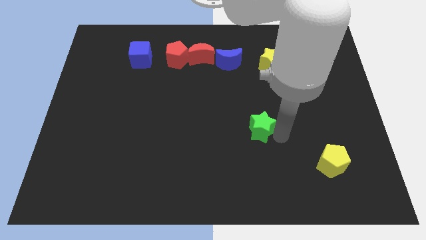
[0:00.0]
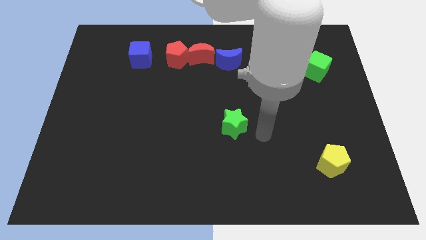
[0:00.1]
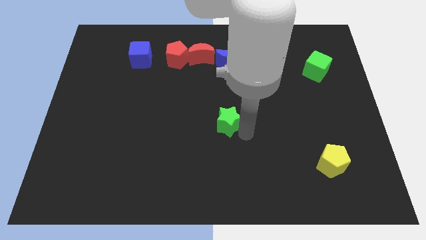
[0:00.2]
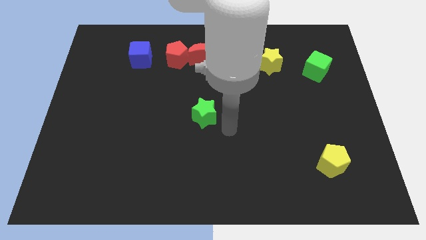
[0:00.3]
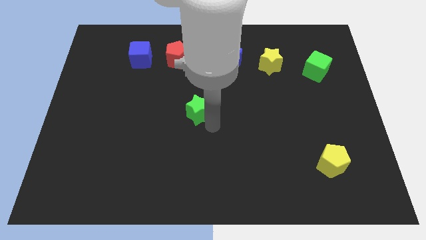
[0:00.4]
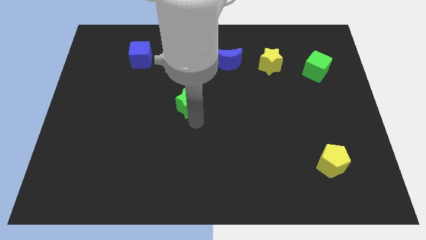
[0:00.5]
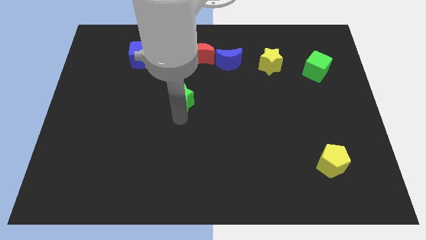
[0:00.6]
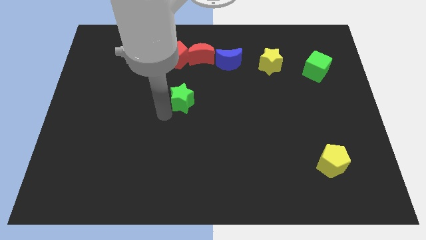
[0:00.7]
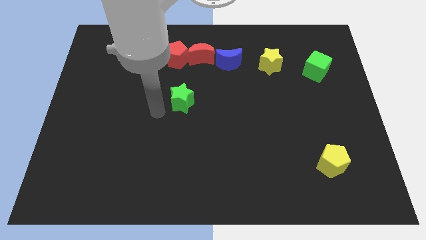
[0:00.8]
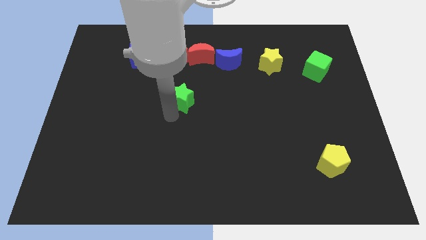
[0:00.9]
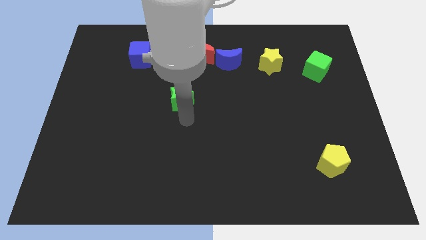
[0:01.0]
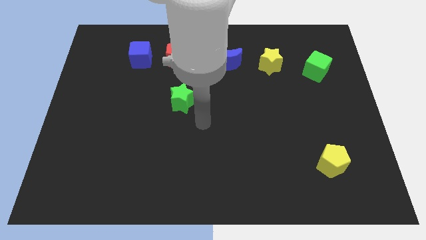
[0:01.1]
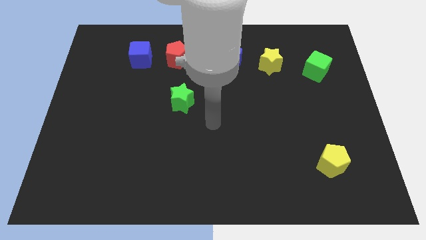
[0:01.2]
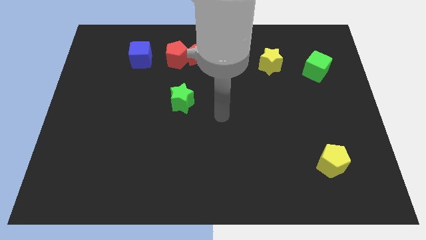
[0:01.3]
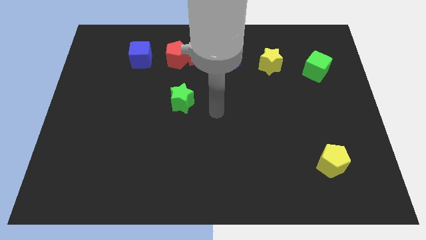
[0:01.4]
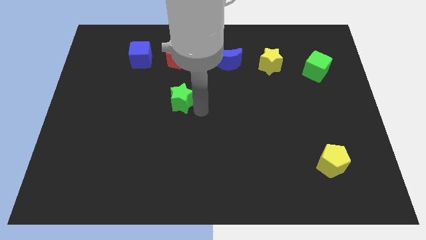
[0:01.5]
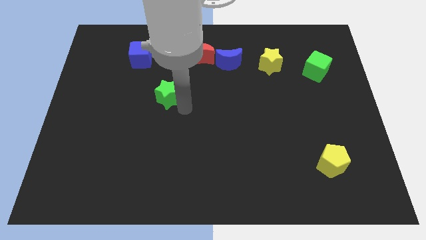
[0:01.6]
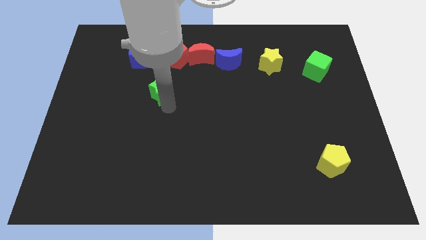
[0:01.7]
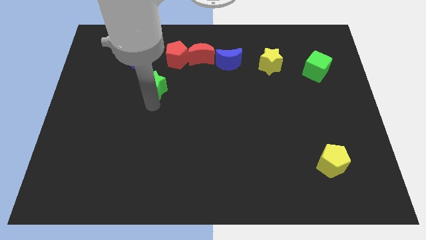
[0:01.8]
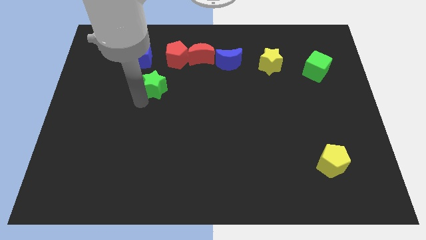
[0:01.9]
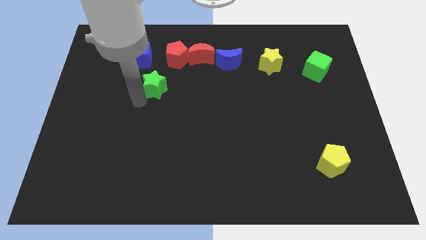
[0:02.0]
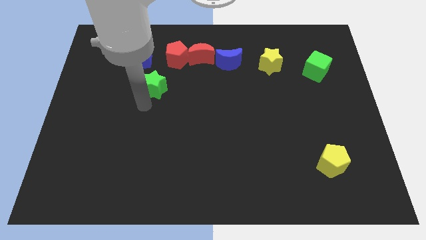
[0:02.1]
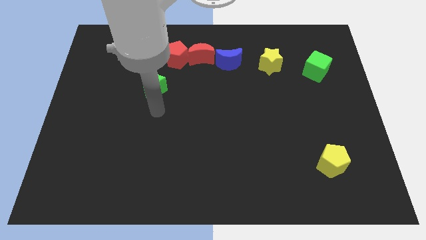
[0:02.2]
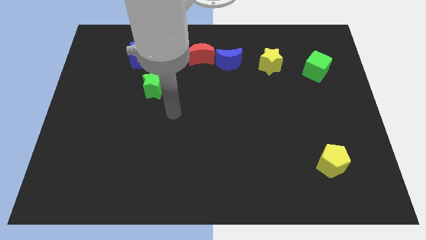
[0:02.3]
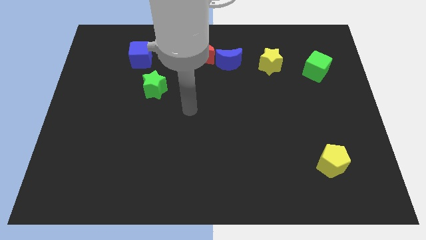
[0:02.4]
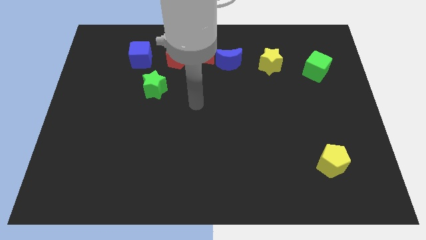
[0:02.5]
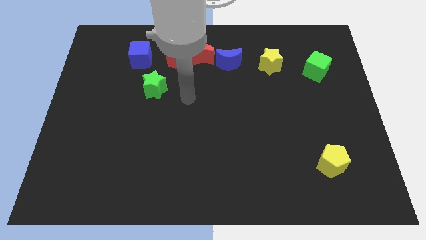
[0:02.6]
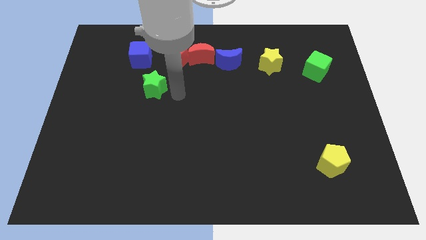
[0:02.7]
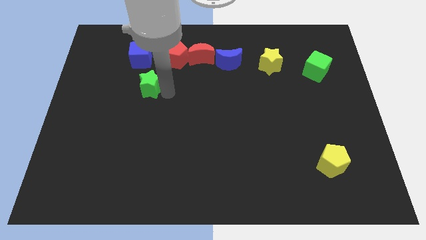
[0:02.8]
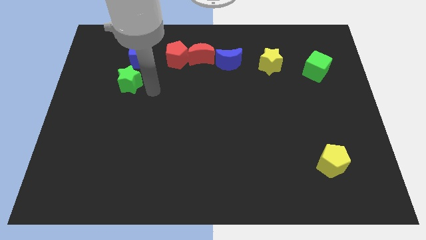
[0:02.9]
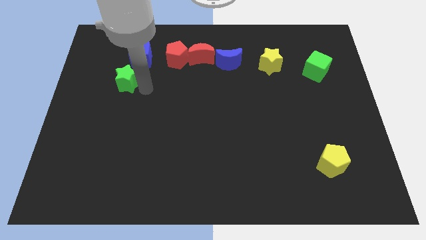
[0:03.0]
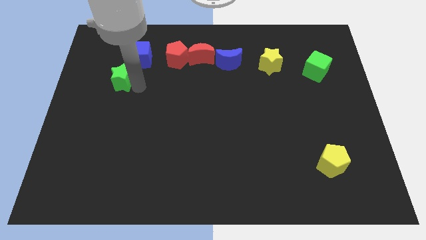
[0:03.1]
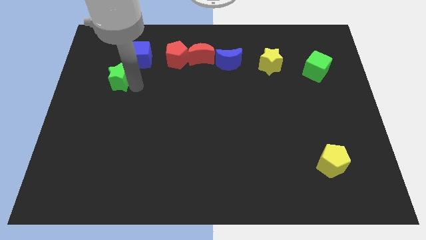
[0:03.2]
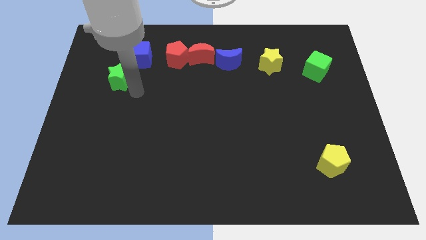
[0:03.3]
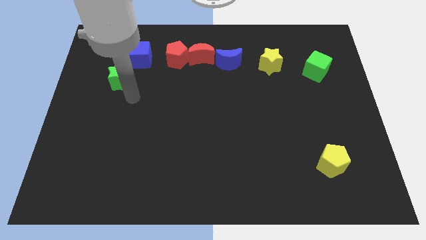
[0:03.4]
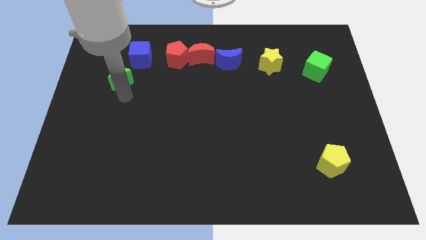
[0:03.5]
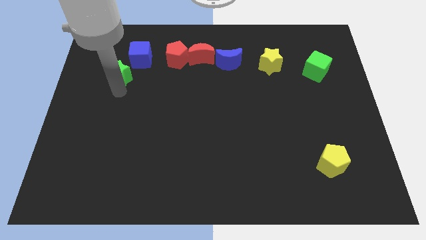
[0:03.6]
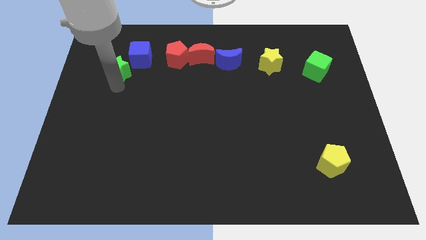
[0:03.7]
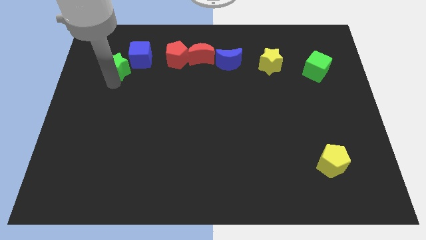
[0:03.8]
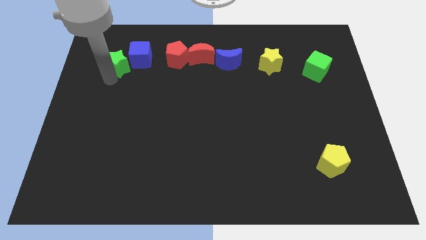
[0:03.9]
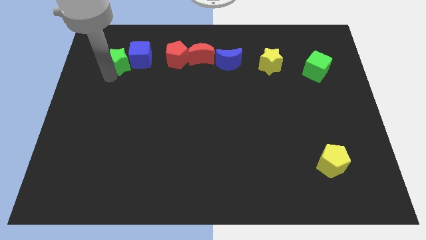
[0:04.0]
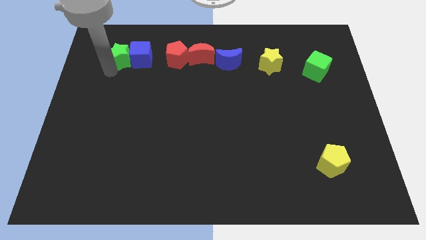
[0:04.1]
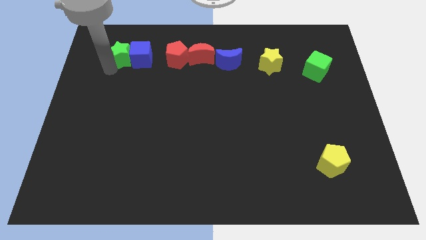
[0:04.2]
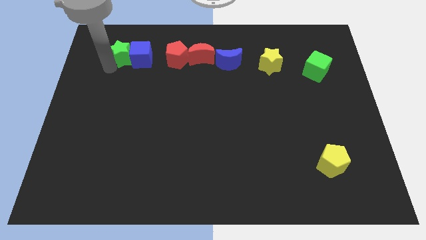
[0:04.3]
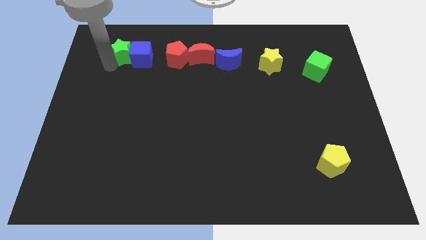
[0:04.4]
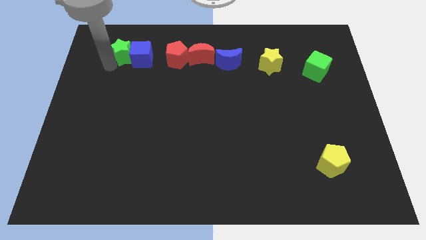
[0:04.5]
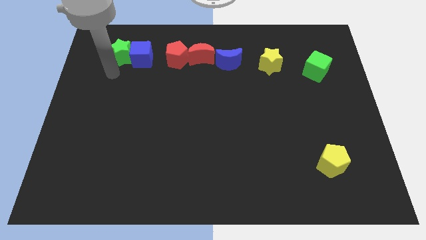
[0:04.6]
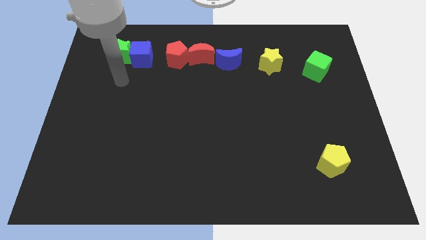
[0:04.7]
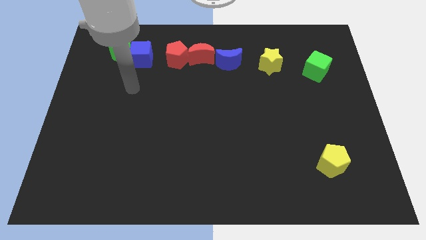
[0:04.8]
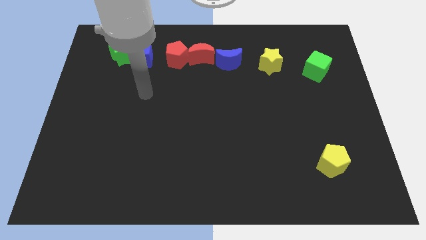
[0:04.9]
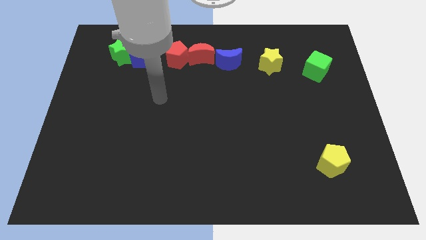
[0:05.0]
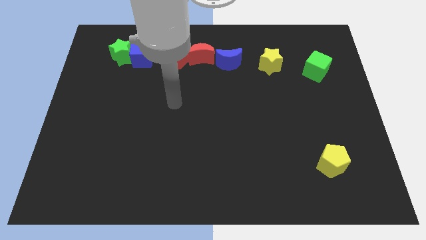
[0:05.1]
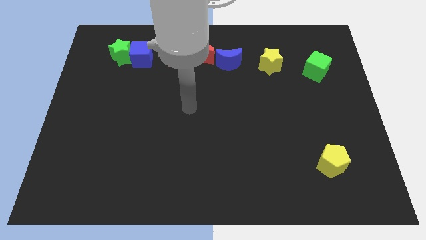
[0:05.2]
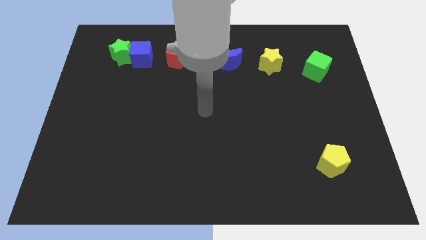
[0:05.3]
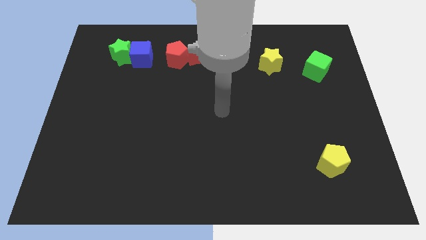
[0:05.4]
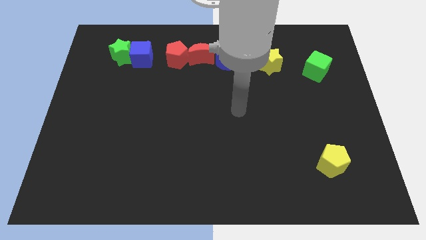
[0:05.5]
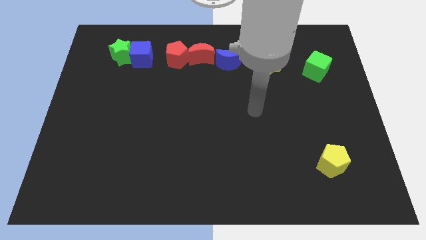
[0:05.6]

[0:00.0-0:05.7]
place the green star into the blue cube

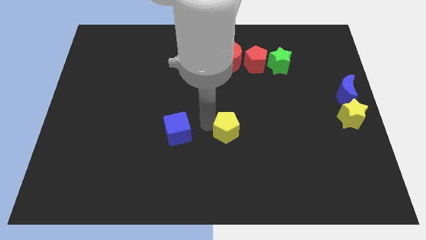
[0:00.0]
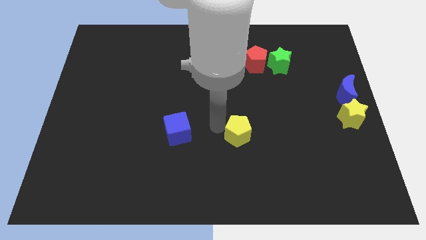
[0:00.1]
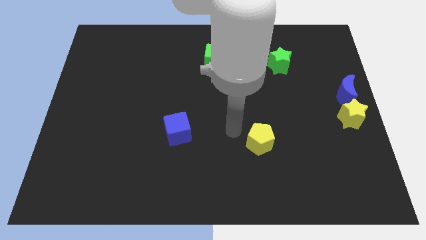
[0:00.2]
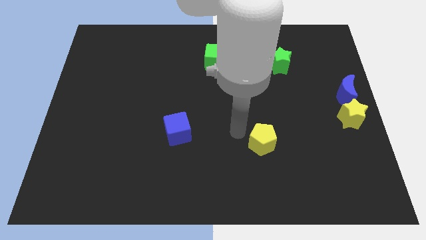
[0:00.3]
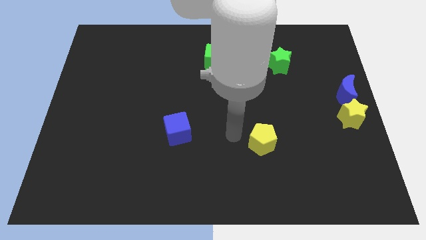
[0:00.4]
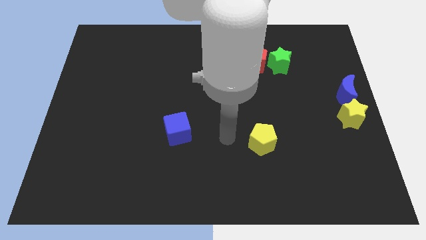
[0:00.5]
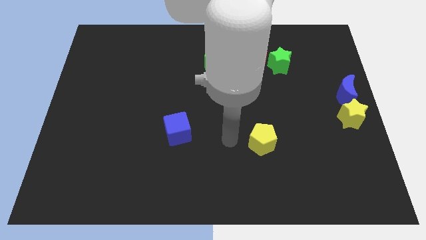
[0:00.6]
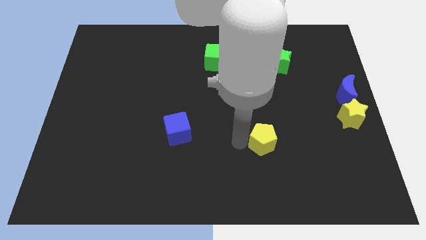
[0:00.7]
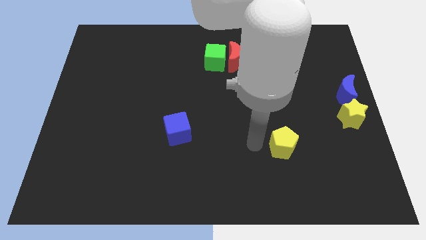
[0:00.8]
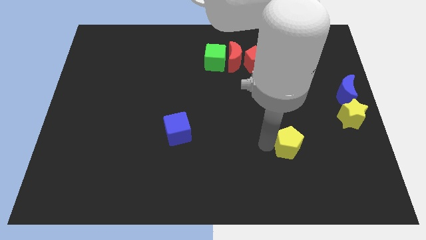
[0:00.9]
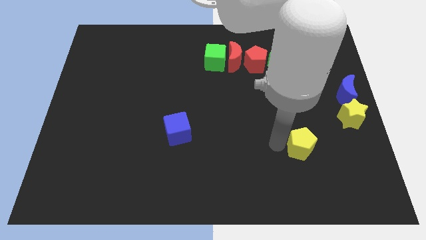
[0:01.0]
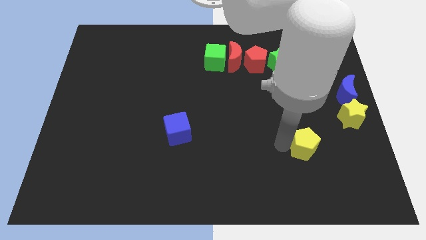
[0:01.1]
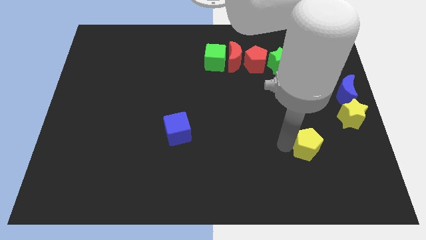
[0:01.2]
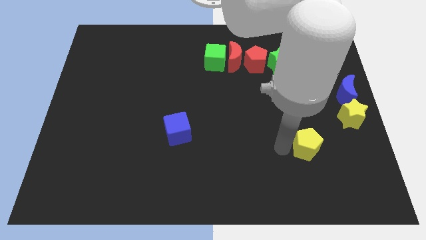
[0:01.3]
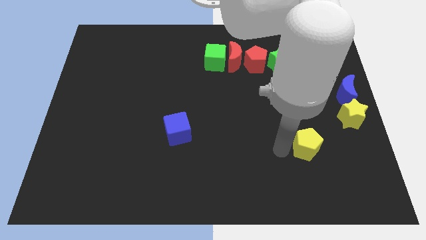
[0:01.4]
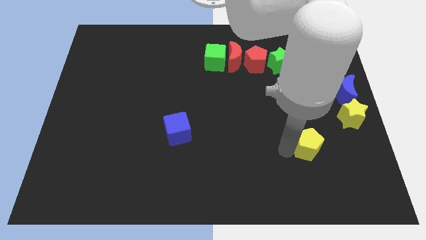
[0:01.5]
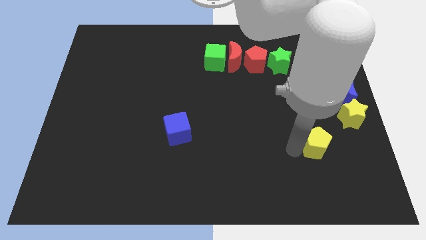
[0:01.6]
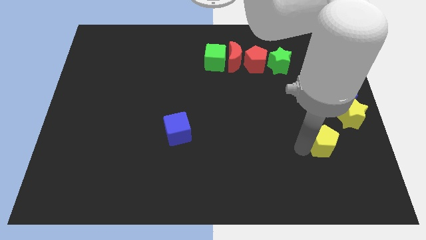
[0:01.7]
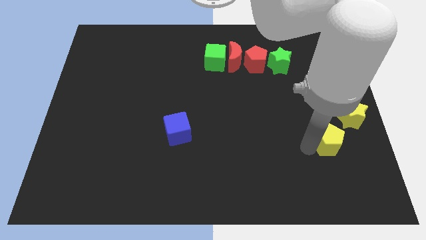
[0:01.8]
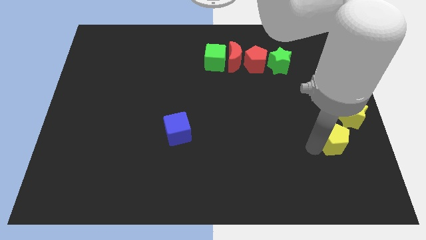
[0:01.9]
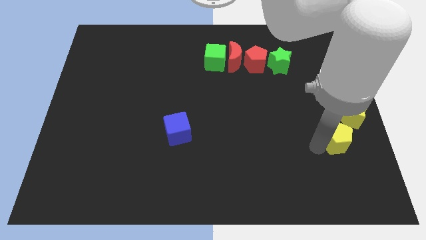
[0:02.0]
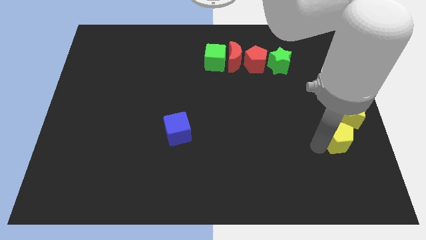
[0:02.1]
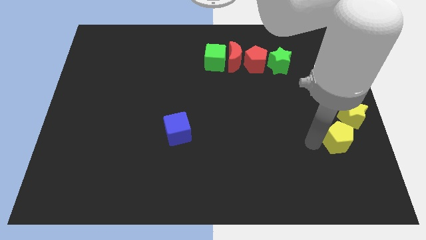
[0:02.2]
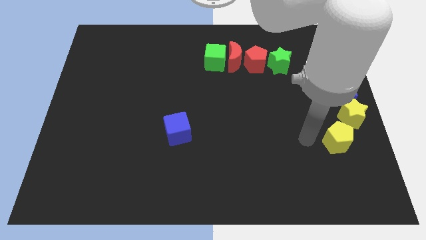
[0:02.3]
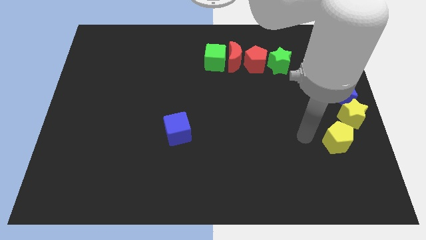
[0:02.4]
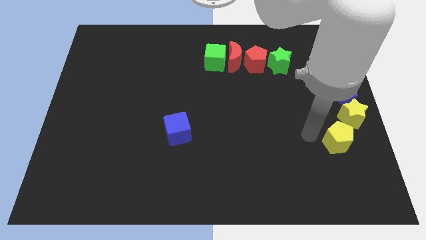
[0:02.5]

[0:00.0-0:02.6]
place the yellow pentagon down to the yellow star

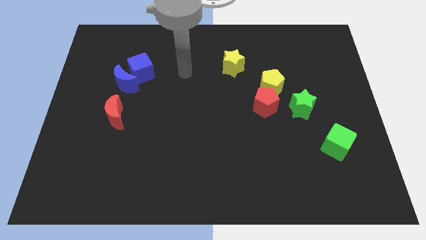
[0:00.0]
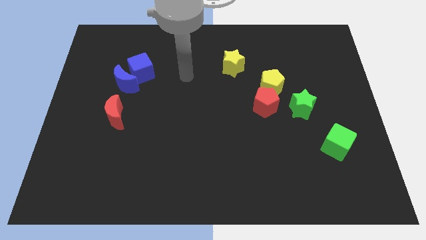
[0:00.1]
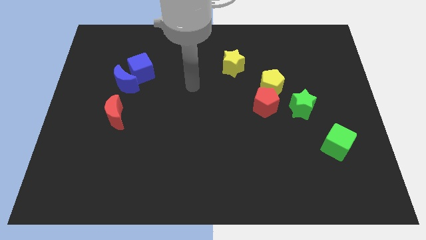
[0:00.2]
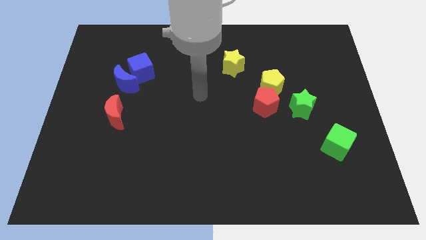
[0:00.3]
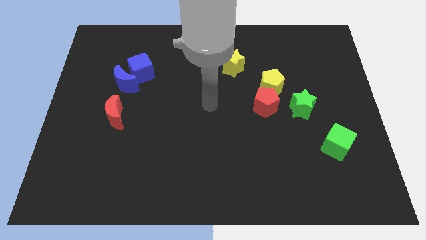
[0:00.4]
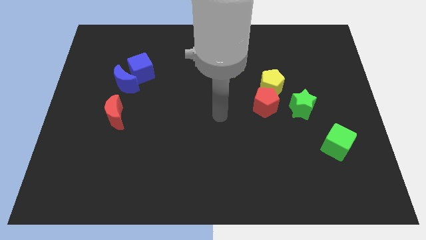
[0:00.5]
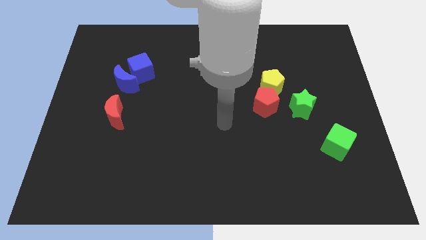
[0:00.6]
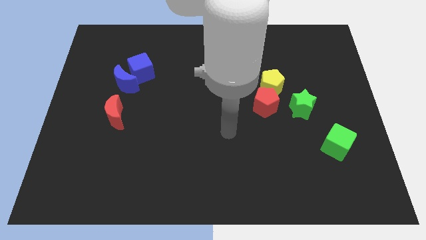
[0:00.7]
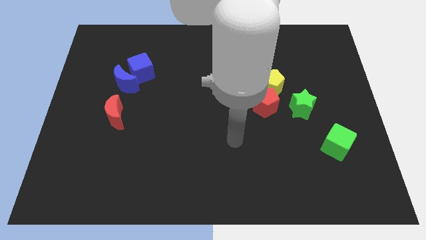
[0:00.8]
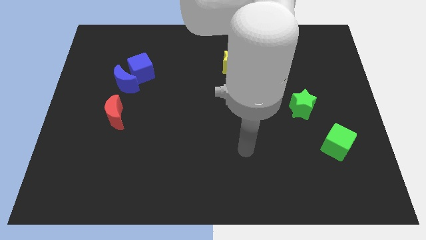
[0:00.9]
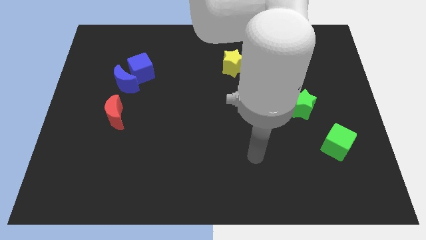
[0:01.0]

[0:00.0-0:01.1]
move your arm towards the bottom side of the board
